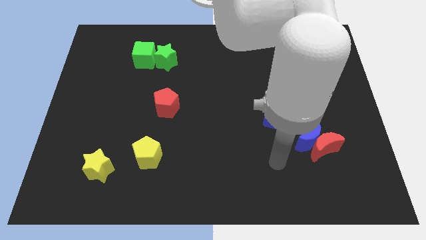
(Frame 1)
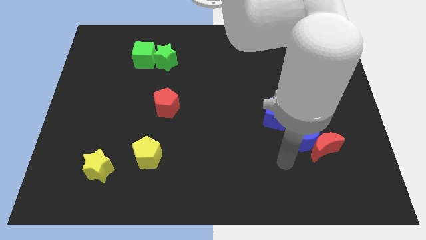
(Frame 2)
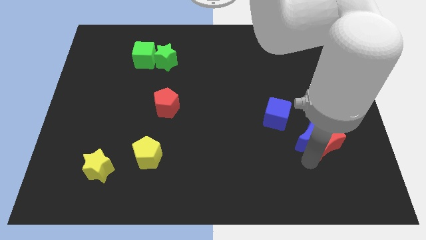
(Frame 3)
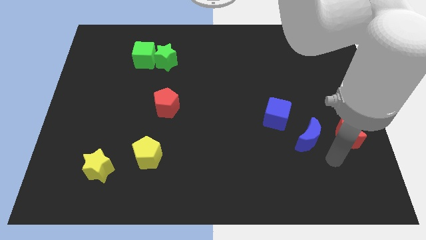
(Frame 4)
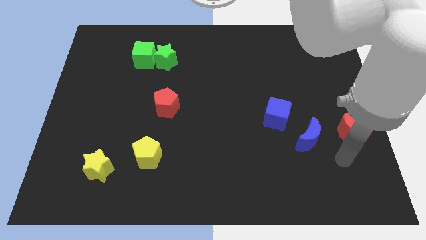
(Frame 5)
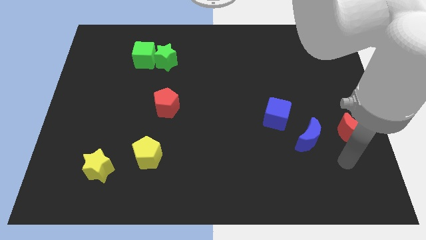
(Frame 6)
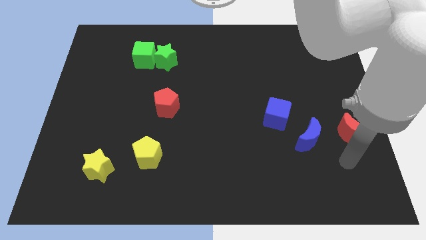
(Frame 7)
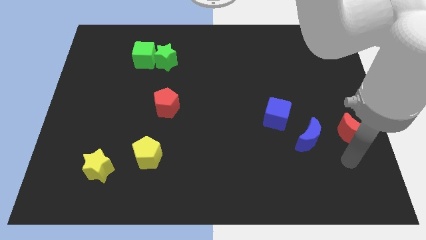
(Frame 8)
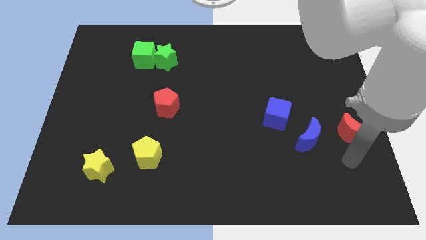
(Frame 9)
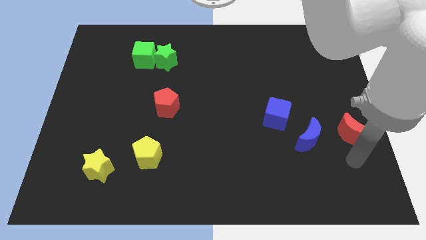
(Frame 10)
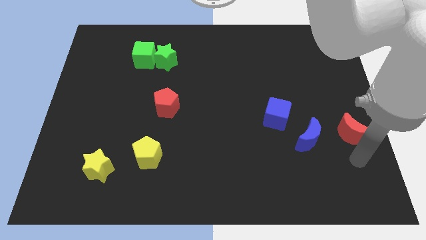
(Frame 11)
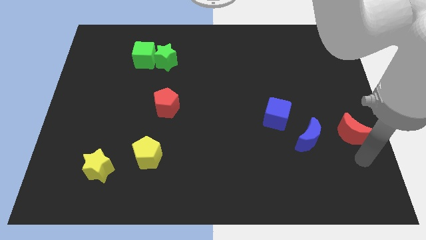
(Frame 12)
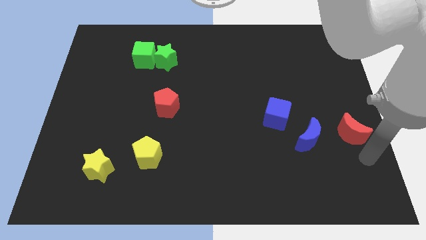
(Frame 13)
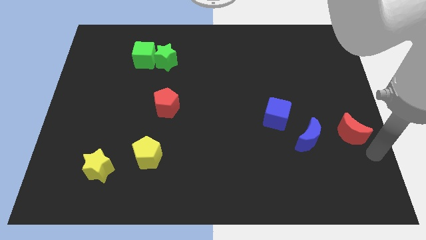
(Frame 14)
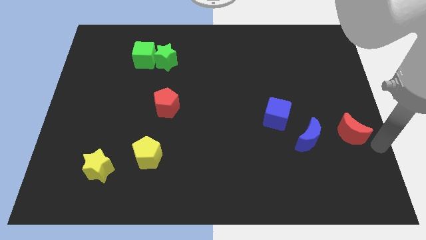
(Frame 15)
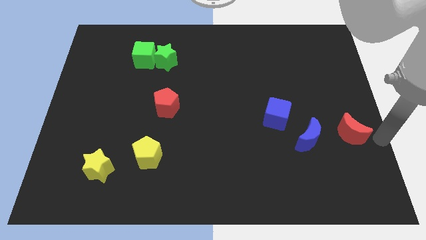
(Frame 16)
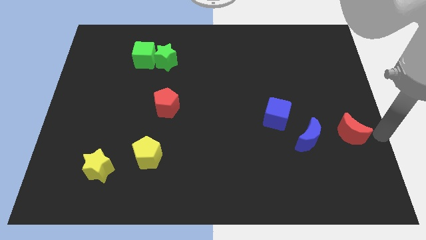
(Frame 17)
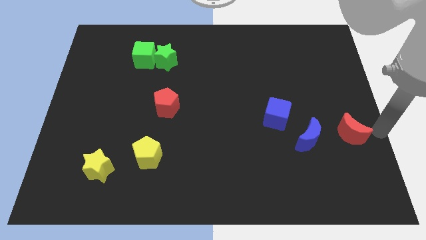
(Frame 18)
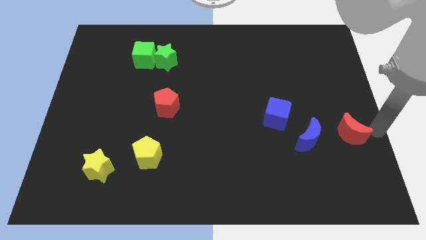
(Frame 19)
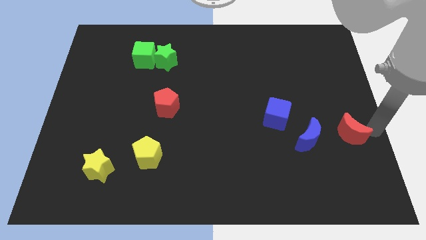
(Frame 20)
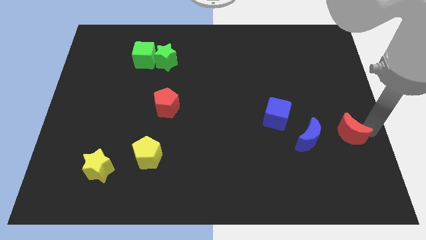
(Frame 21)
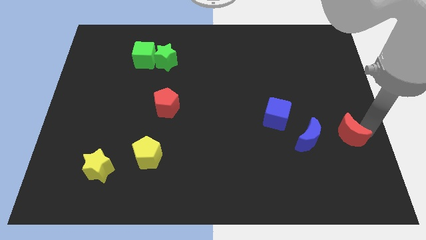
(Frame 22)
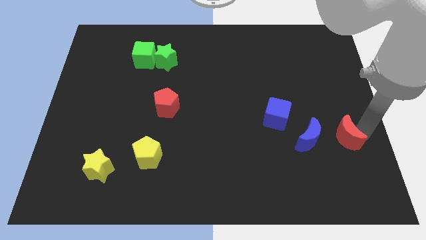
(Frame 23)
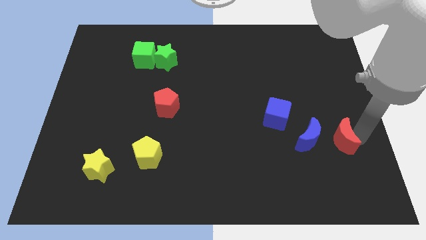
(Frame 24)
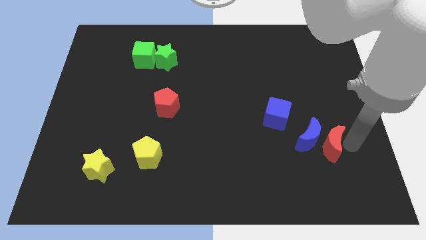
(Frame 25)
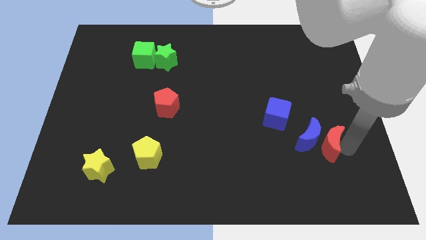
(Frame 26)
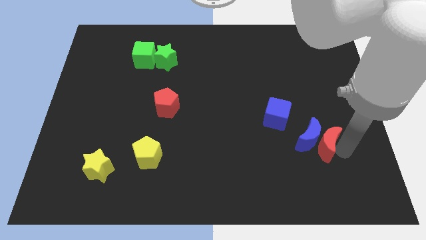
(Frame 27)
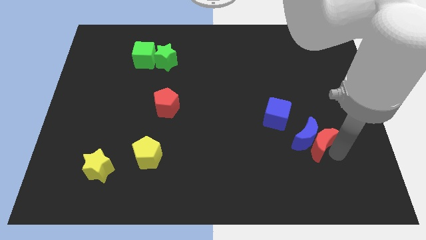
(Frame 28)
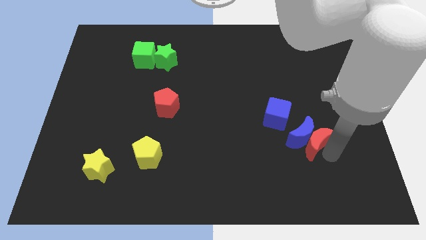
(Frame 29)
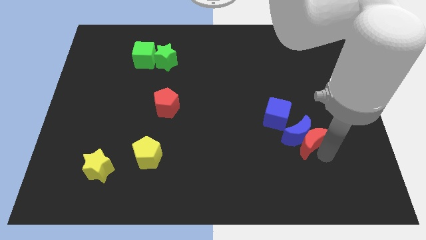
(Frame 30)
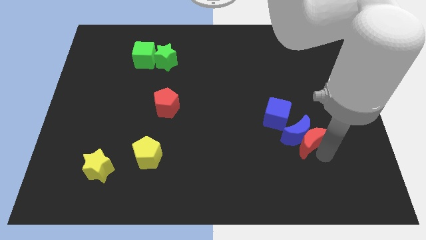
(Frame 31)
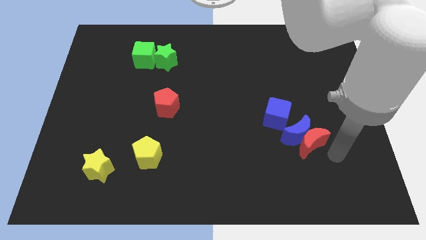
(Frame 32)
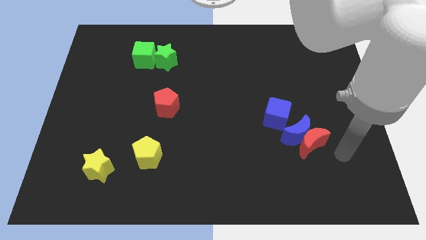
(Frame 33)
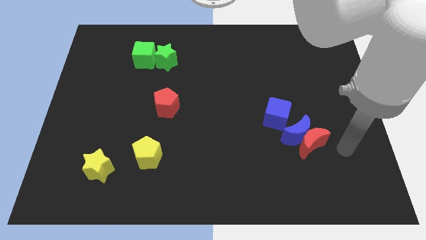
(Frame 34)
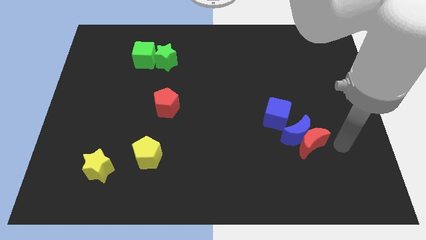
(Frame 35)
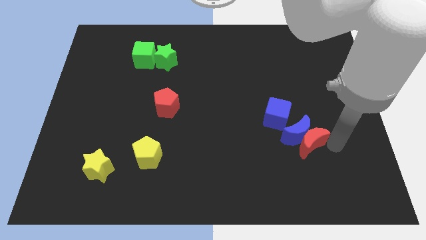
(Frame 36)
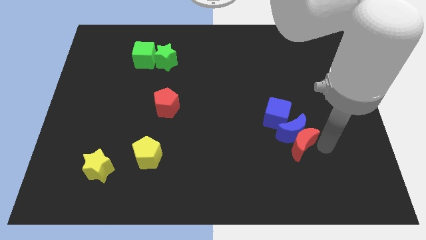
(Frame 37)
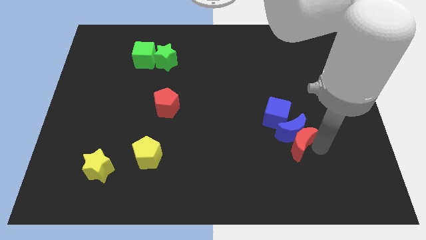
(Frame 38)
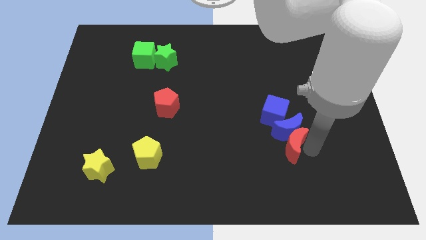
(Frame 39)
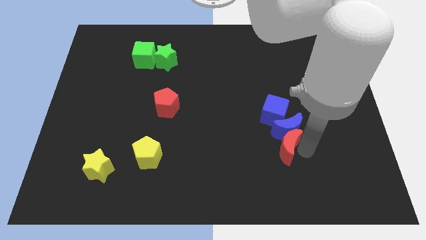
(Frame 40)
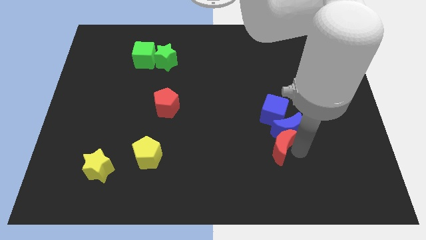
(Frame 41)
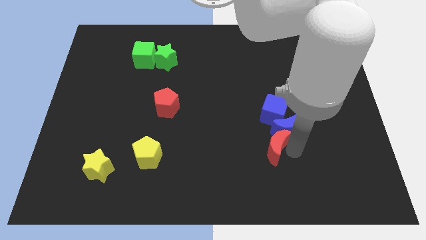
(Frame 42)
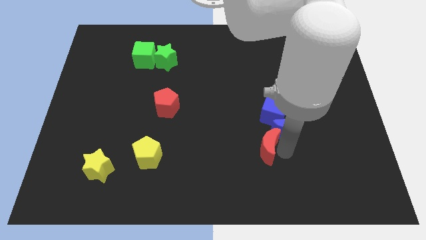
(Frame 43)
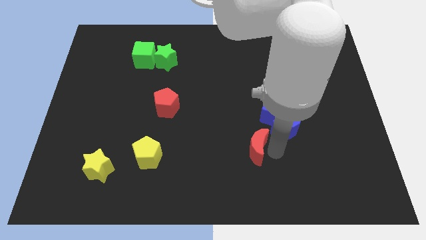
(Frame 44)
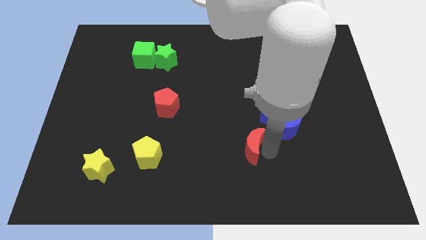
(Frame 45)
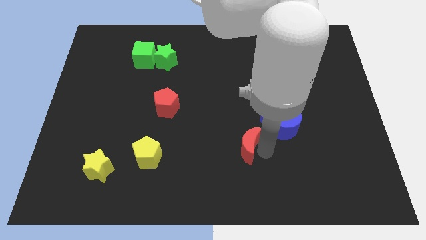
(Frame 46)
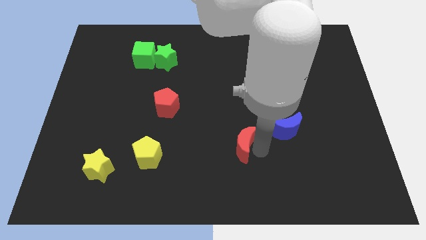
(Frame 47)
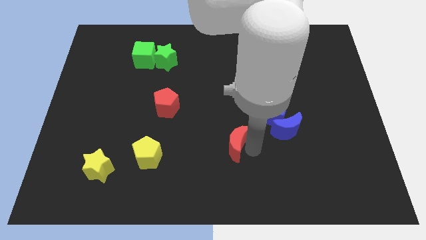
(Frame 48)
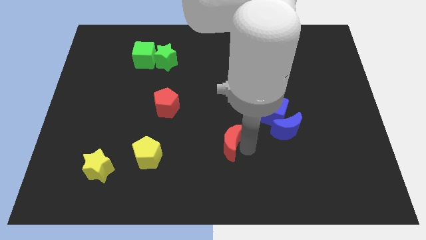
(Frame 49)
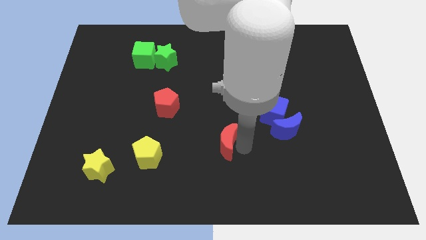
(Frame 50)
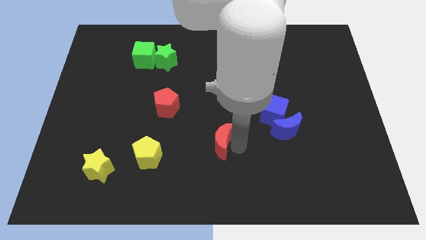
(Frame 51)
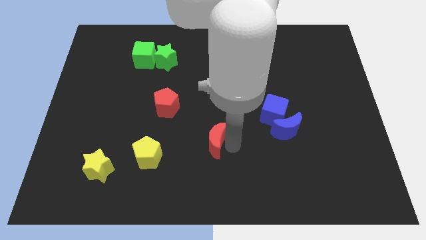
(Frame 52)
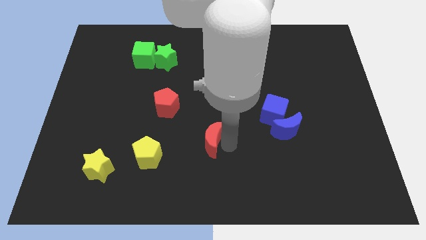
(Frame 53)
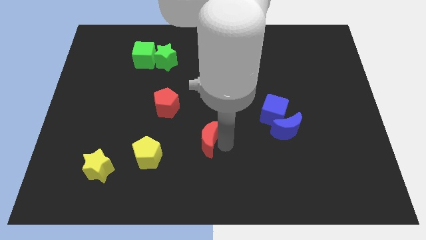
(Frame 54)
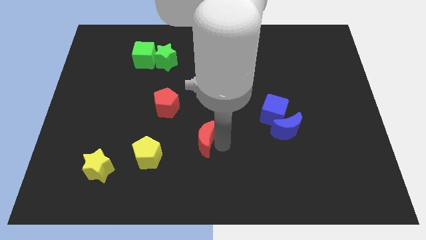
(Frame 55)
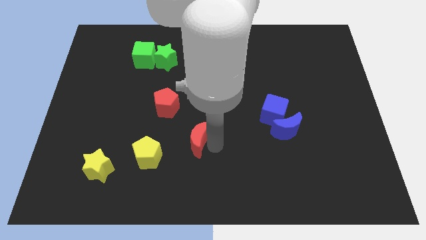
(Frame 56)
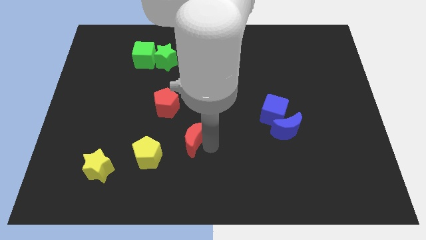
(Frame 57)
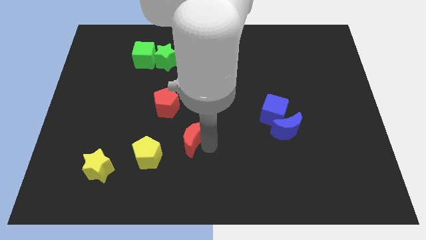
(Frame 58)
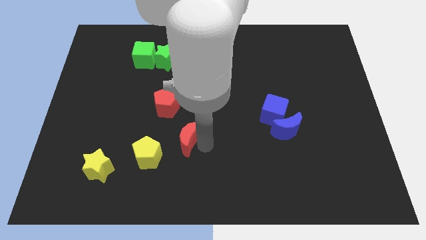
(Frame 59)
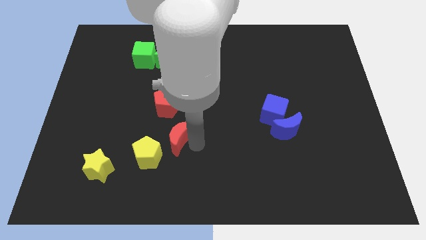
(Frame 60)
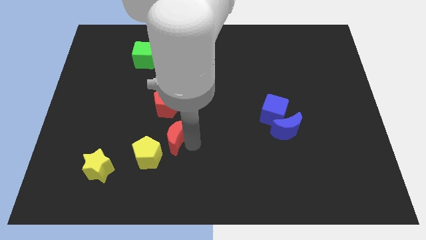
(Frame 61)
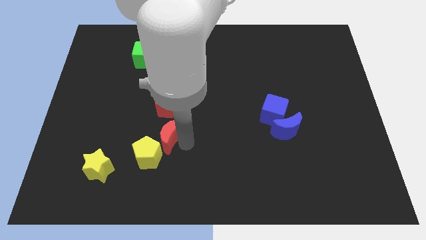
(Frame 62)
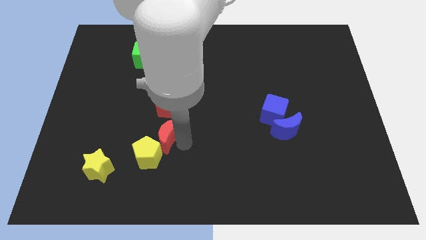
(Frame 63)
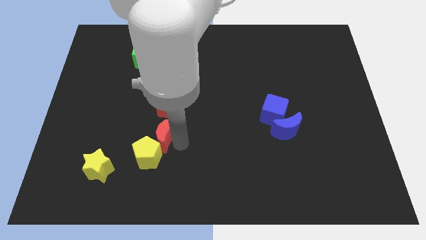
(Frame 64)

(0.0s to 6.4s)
move the red moon towards the yellow pentagon

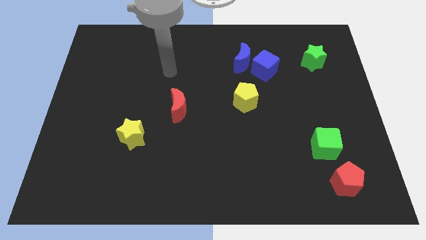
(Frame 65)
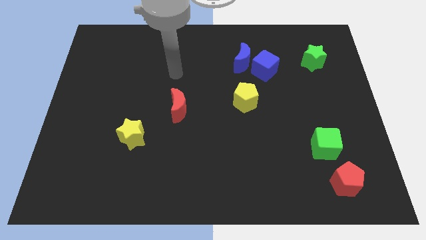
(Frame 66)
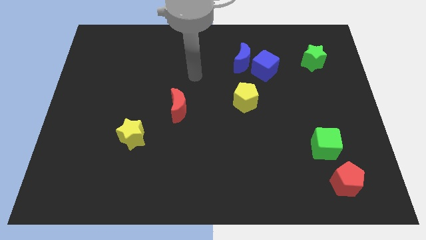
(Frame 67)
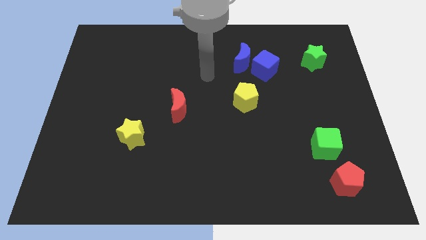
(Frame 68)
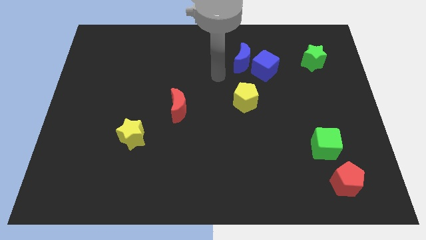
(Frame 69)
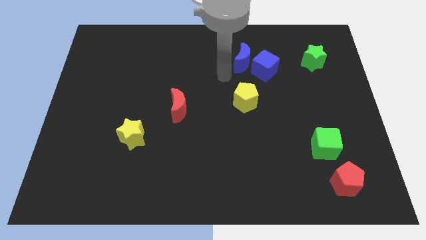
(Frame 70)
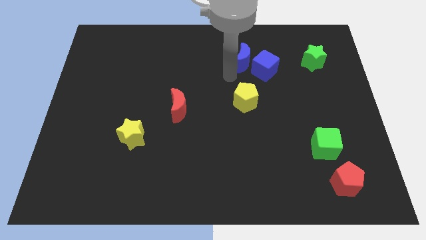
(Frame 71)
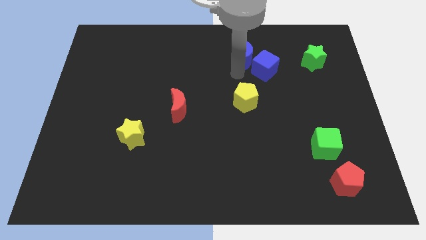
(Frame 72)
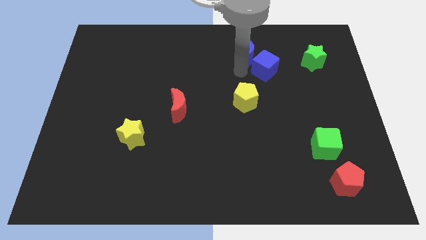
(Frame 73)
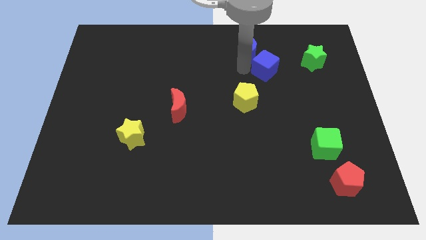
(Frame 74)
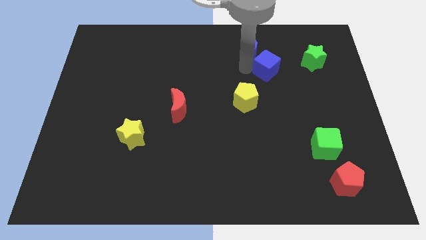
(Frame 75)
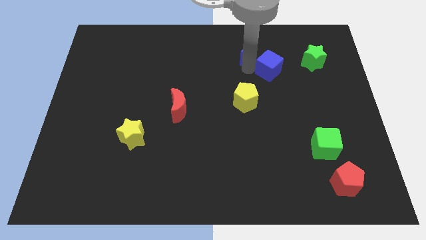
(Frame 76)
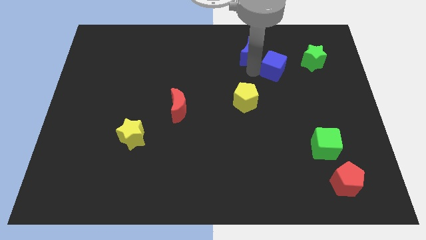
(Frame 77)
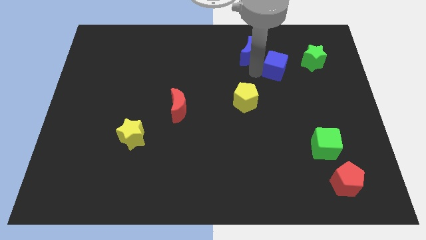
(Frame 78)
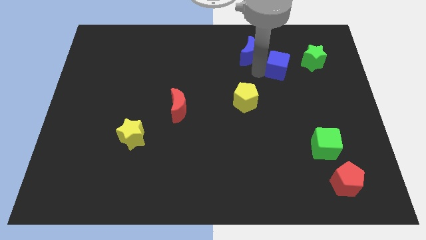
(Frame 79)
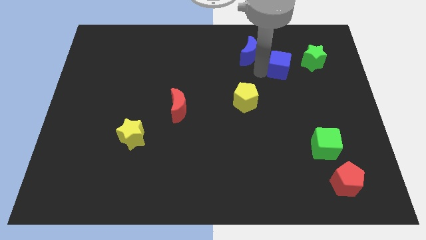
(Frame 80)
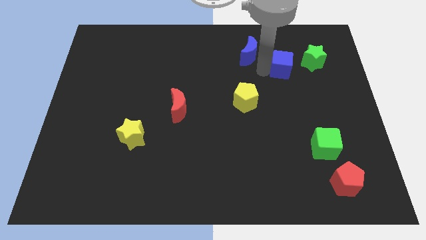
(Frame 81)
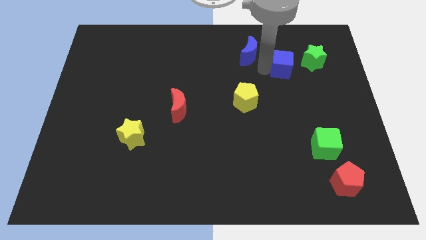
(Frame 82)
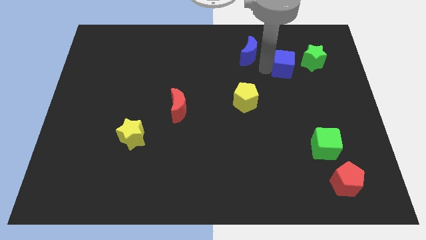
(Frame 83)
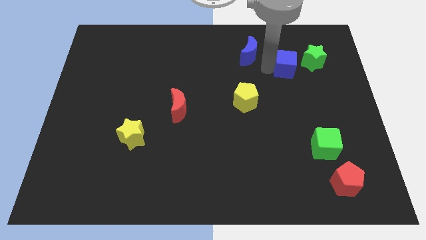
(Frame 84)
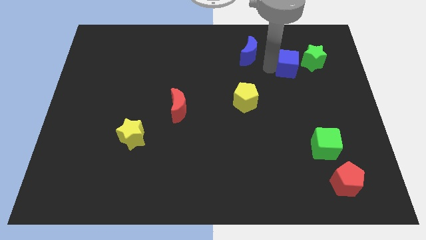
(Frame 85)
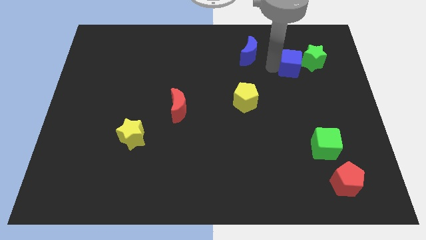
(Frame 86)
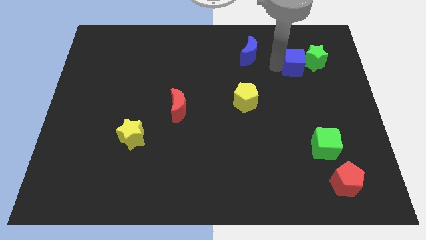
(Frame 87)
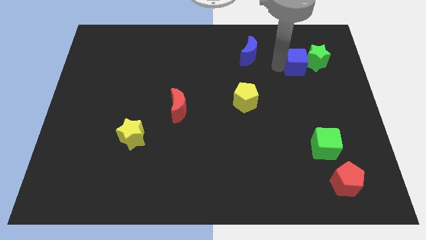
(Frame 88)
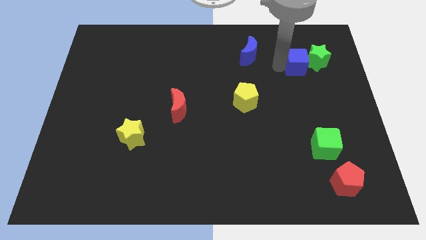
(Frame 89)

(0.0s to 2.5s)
move the blue cube towards the green star
